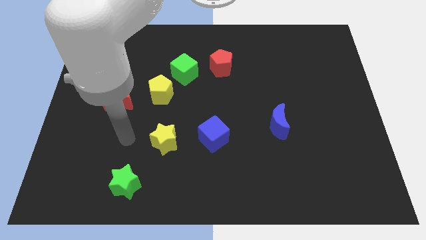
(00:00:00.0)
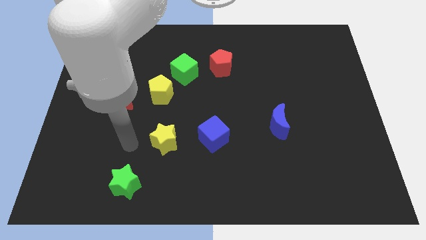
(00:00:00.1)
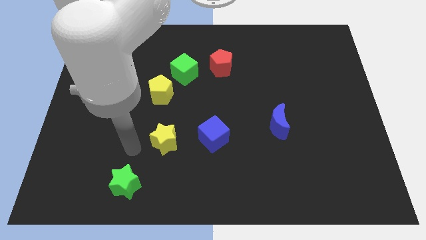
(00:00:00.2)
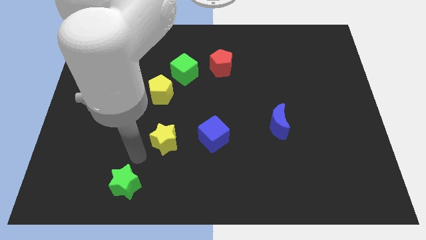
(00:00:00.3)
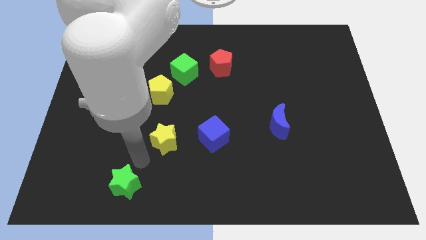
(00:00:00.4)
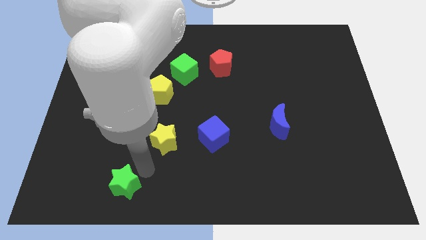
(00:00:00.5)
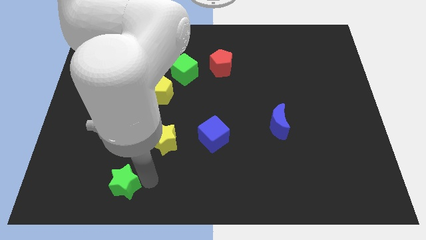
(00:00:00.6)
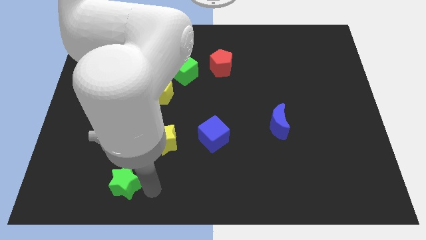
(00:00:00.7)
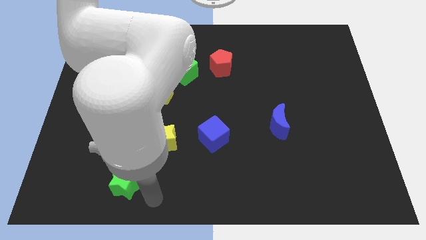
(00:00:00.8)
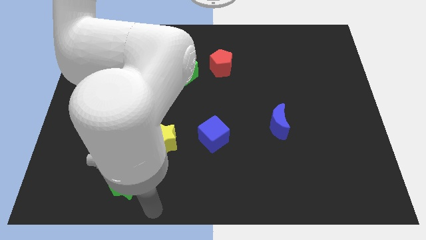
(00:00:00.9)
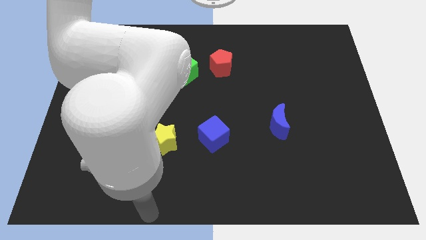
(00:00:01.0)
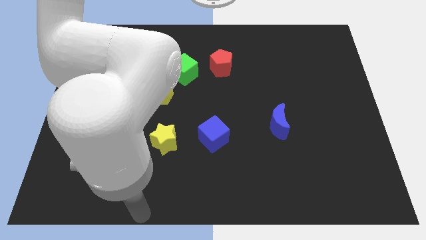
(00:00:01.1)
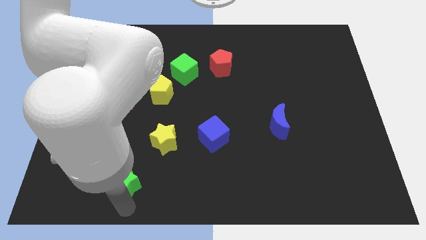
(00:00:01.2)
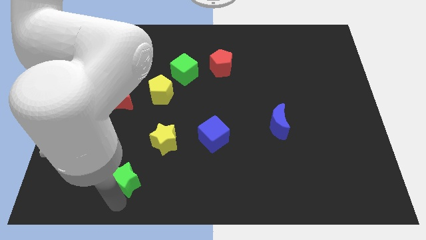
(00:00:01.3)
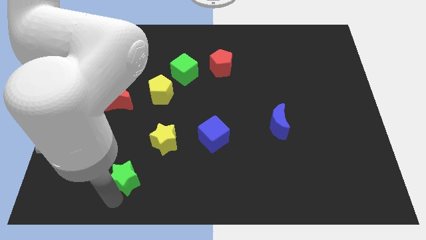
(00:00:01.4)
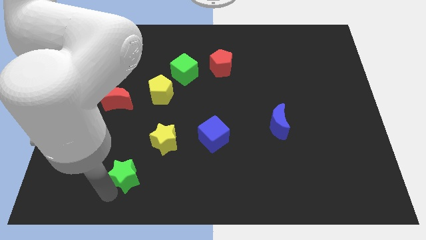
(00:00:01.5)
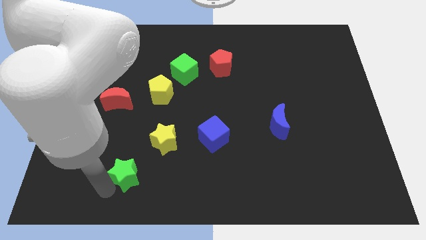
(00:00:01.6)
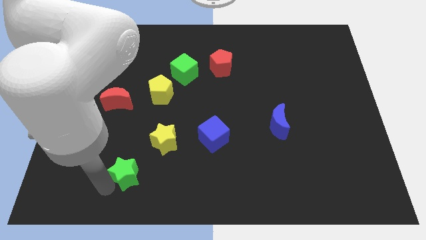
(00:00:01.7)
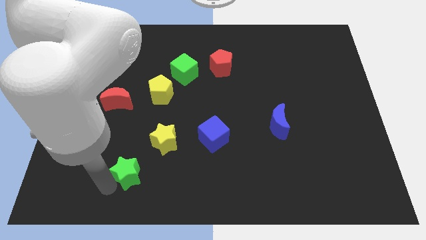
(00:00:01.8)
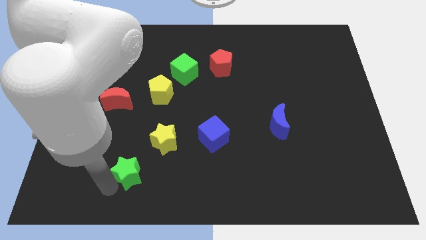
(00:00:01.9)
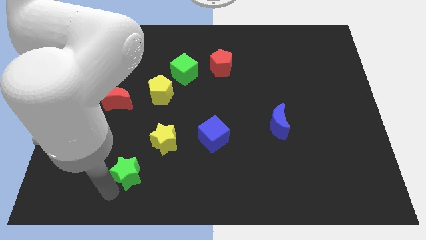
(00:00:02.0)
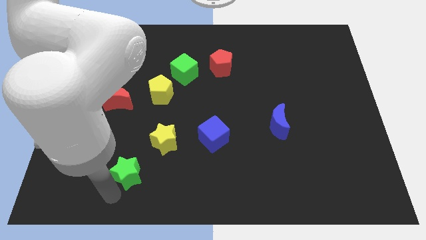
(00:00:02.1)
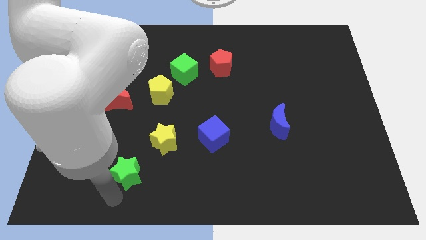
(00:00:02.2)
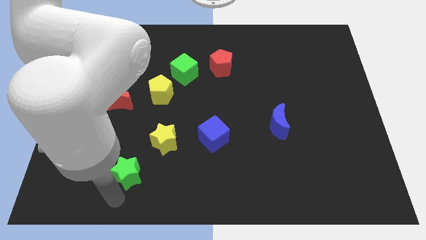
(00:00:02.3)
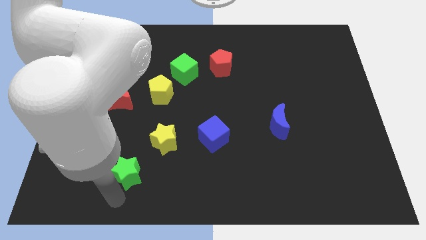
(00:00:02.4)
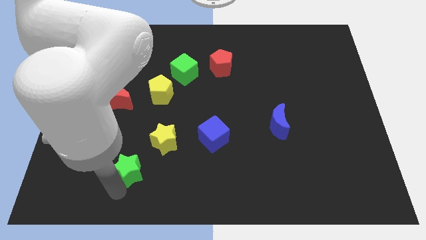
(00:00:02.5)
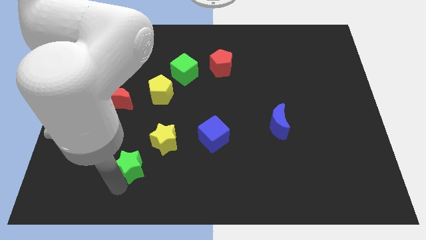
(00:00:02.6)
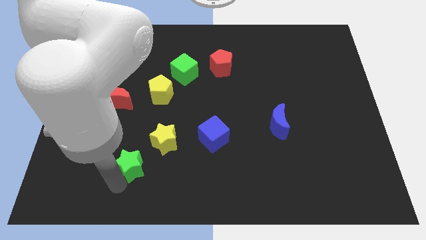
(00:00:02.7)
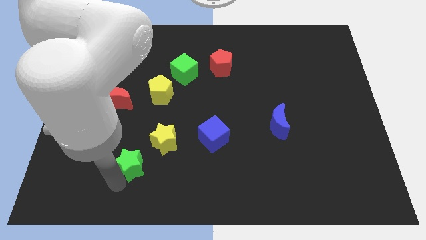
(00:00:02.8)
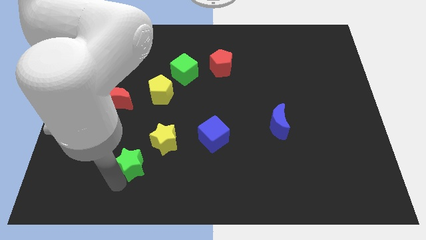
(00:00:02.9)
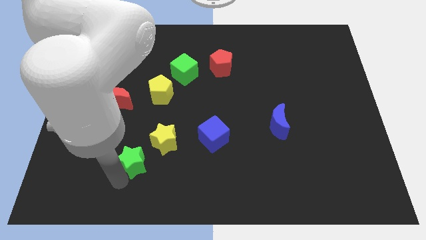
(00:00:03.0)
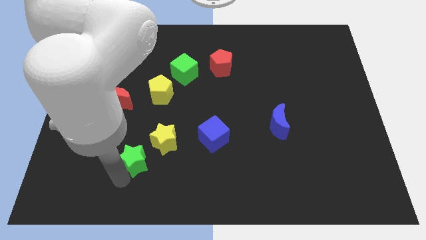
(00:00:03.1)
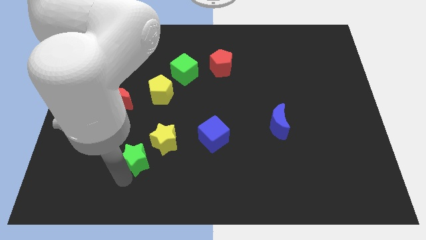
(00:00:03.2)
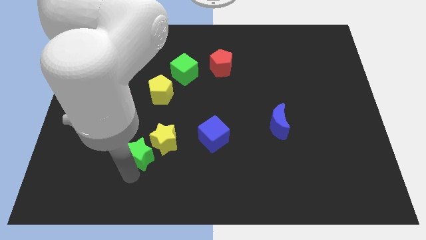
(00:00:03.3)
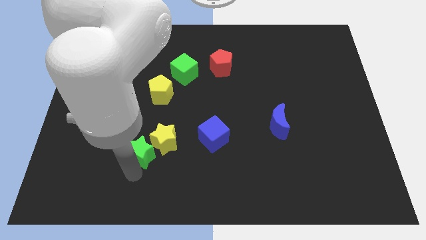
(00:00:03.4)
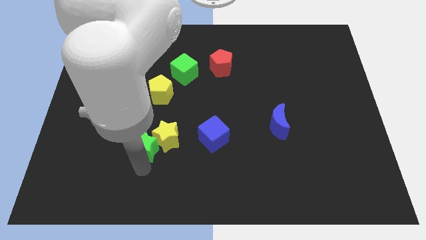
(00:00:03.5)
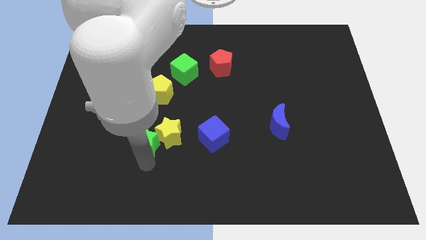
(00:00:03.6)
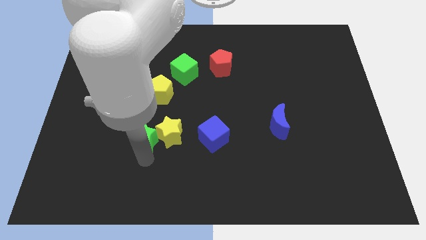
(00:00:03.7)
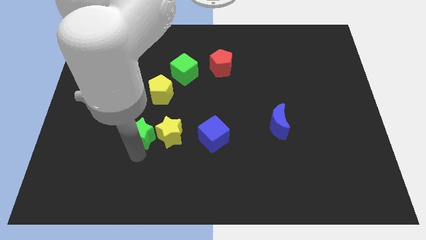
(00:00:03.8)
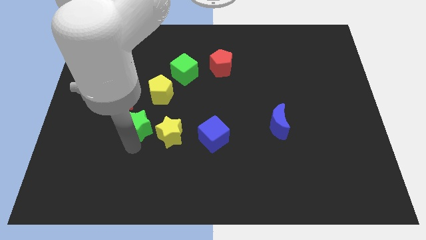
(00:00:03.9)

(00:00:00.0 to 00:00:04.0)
place green star to the left of yellow star

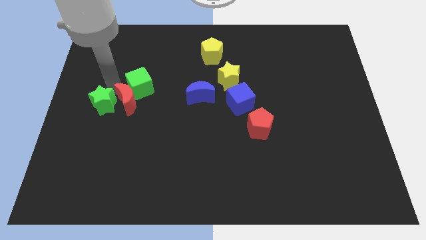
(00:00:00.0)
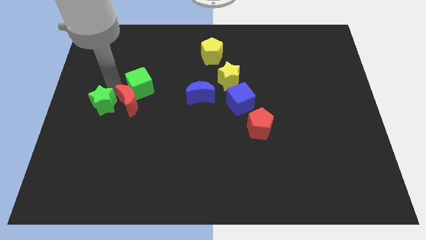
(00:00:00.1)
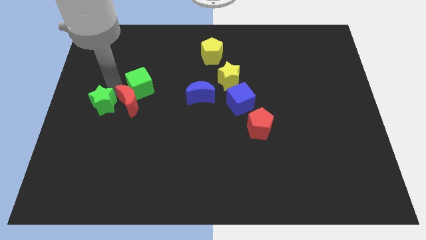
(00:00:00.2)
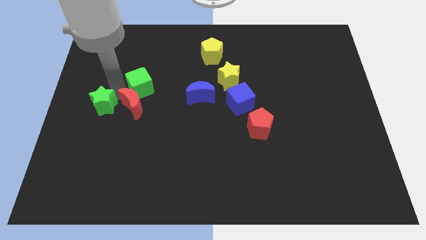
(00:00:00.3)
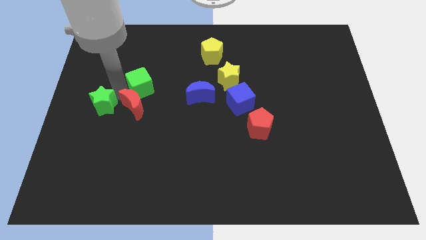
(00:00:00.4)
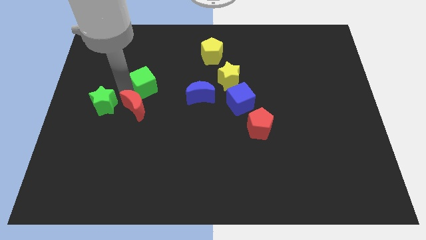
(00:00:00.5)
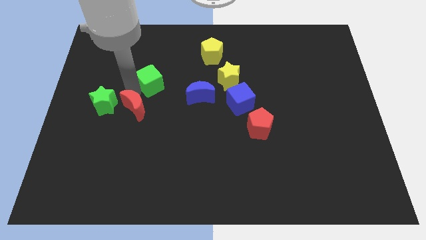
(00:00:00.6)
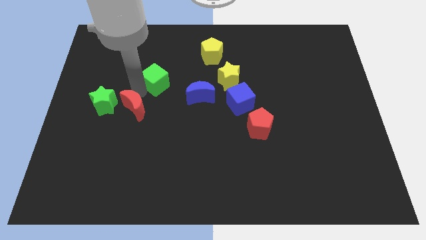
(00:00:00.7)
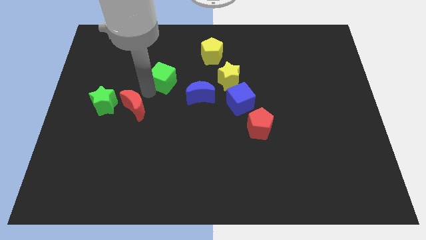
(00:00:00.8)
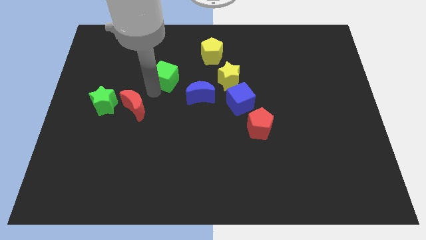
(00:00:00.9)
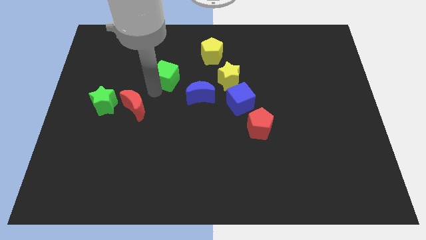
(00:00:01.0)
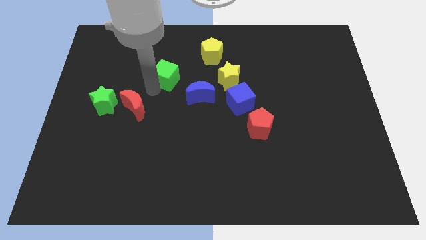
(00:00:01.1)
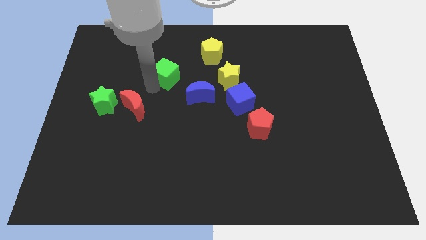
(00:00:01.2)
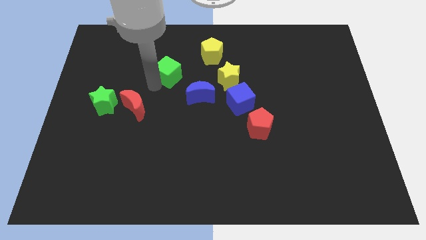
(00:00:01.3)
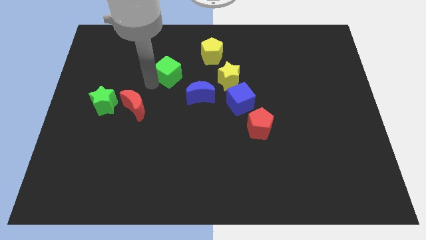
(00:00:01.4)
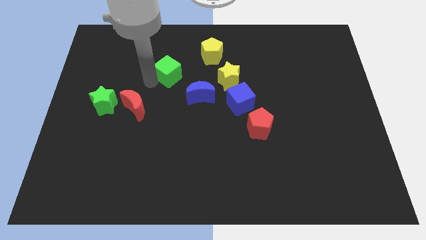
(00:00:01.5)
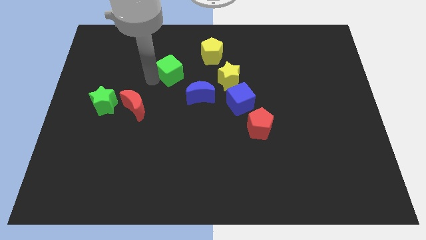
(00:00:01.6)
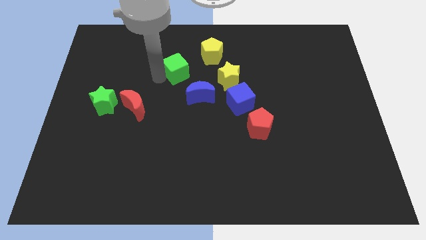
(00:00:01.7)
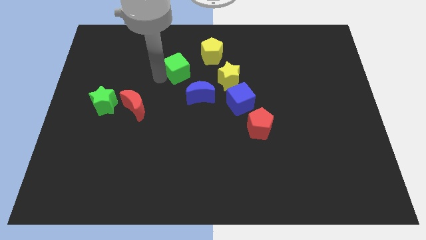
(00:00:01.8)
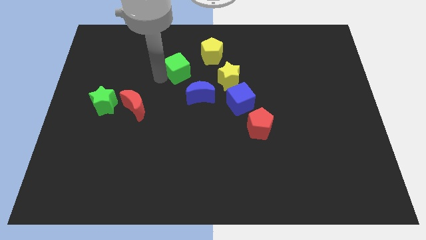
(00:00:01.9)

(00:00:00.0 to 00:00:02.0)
separate red crescent and green cube

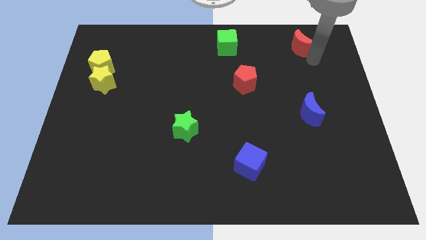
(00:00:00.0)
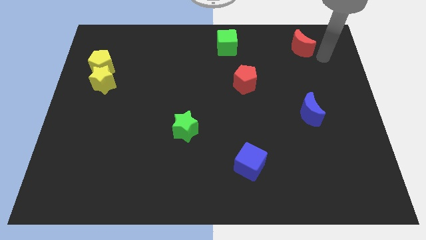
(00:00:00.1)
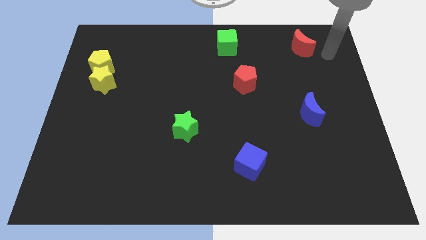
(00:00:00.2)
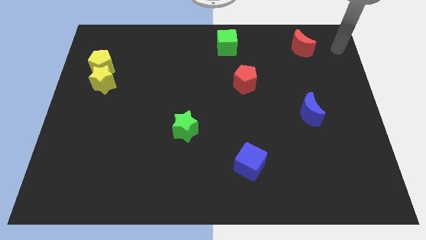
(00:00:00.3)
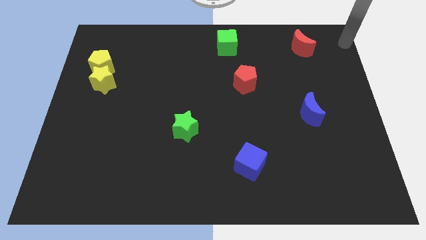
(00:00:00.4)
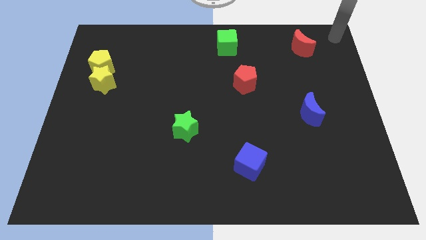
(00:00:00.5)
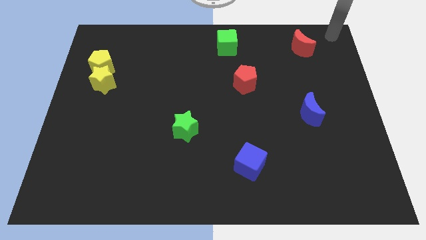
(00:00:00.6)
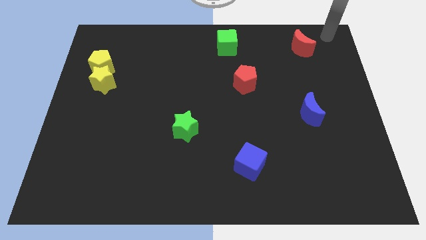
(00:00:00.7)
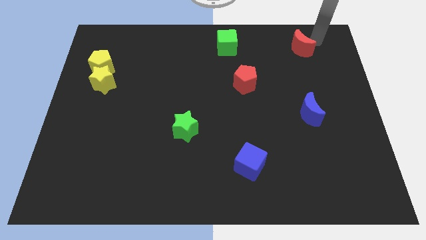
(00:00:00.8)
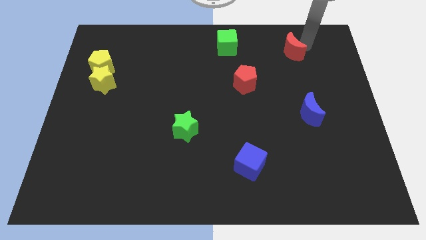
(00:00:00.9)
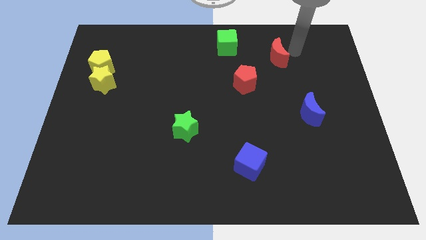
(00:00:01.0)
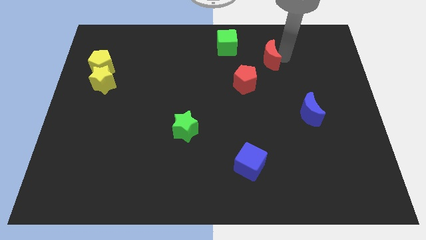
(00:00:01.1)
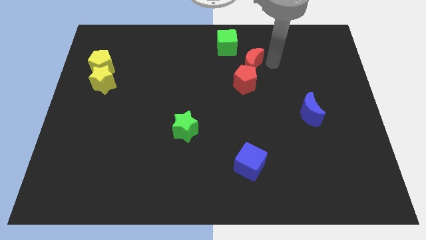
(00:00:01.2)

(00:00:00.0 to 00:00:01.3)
move the red crescent to the top of the red pentagon

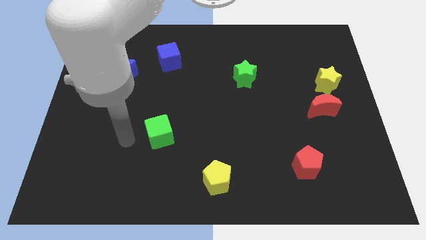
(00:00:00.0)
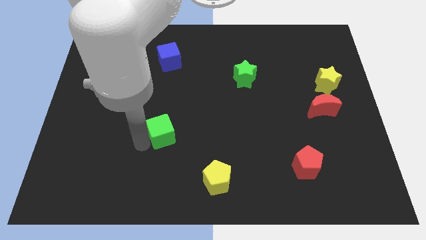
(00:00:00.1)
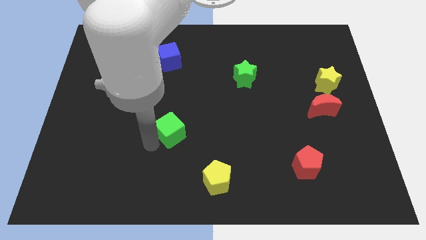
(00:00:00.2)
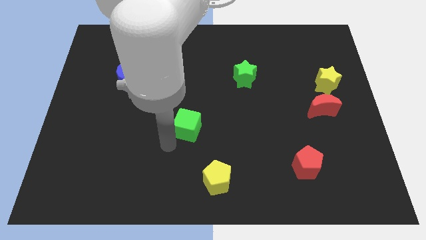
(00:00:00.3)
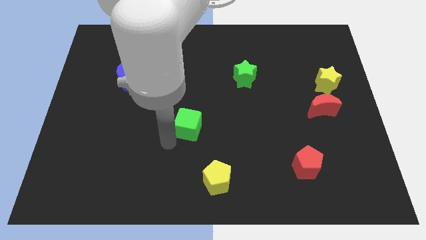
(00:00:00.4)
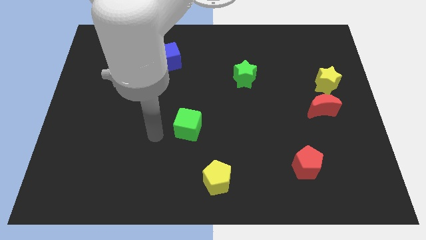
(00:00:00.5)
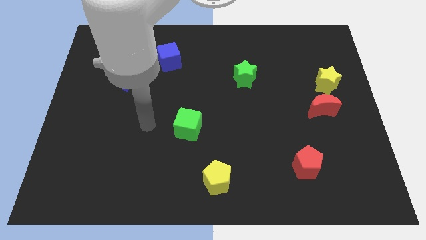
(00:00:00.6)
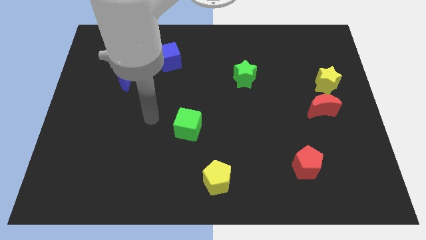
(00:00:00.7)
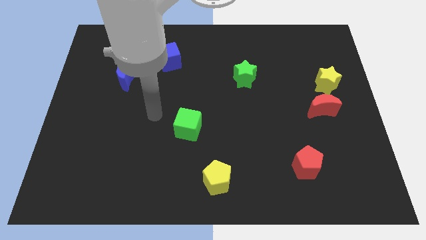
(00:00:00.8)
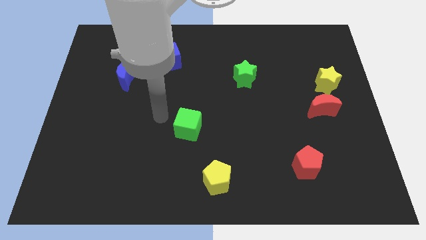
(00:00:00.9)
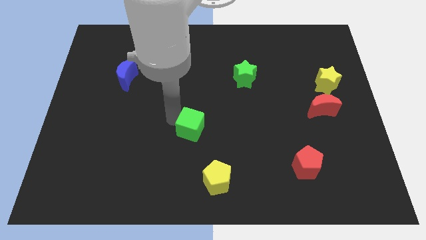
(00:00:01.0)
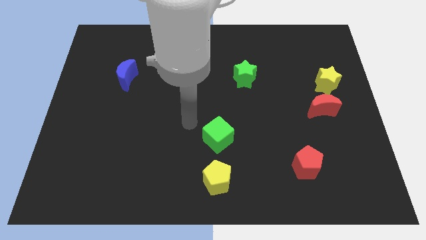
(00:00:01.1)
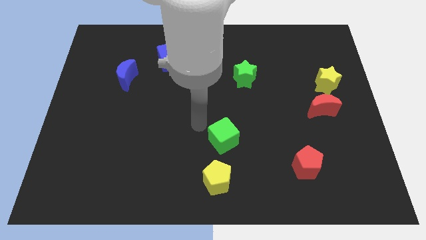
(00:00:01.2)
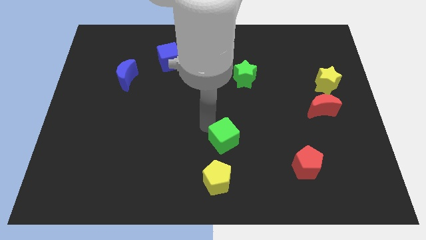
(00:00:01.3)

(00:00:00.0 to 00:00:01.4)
place green cube to the top of yellow pentagon

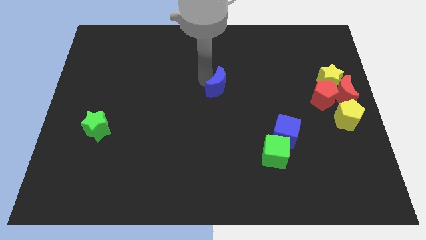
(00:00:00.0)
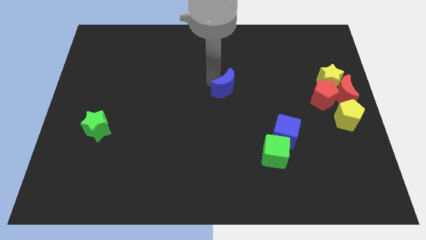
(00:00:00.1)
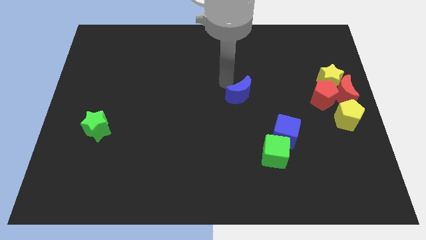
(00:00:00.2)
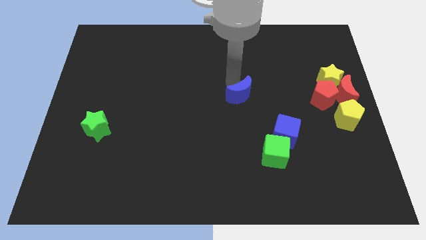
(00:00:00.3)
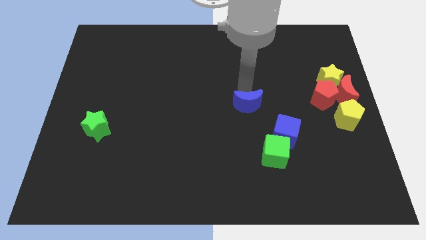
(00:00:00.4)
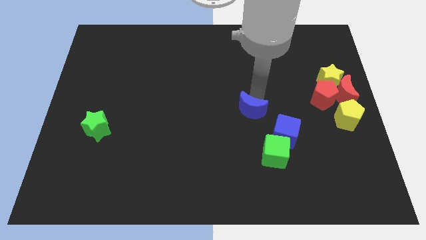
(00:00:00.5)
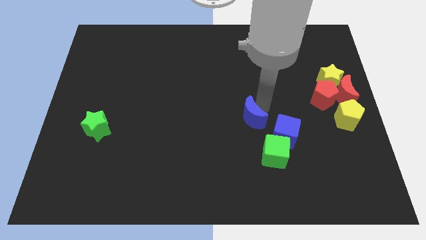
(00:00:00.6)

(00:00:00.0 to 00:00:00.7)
push the blue moon towards the blue cube
